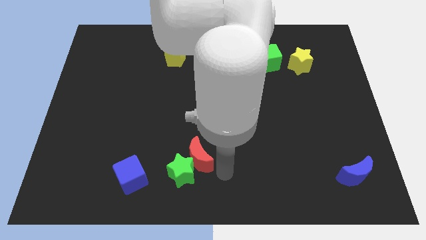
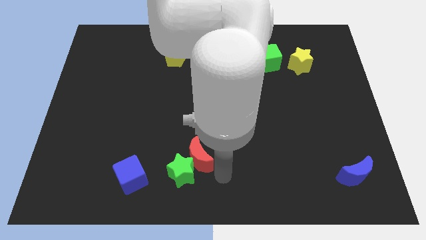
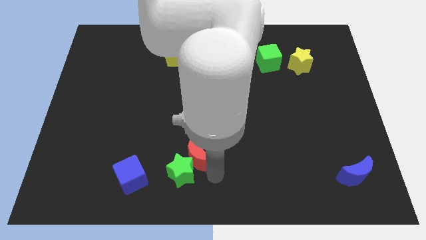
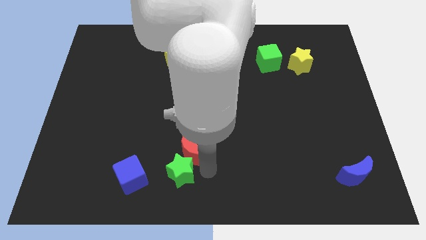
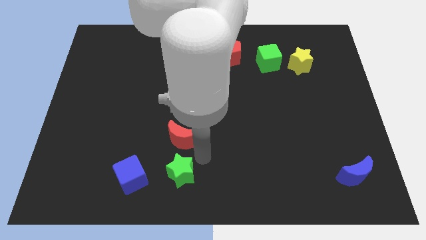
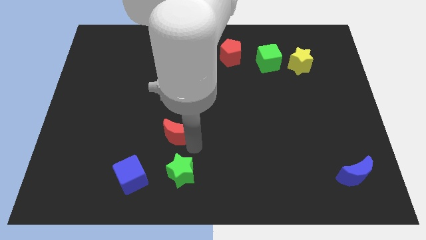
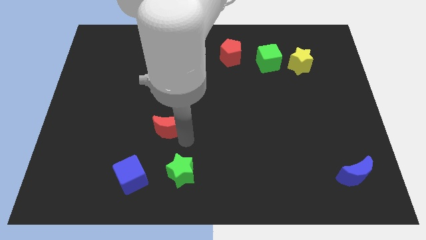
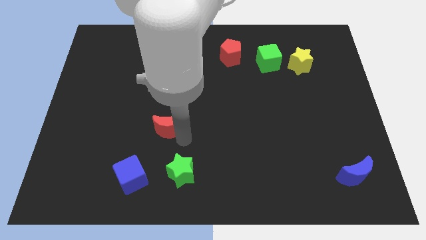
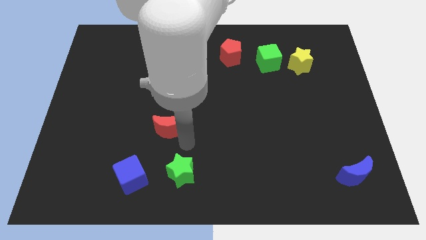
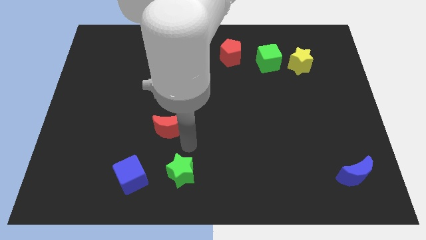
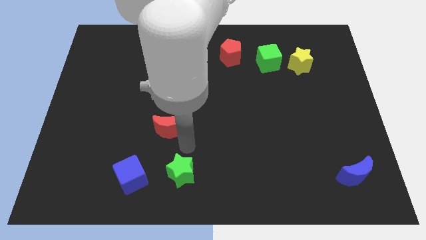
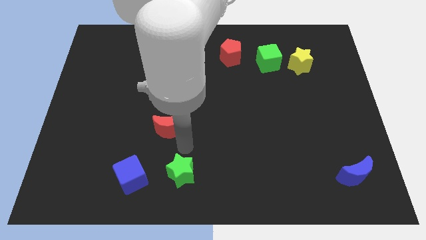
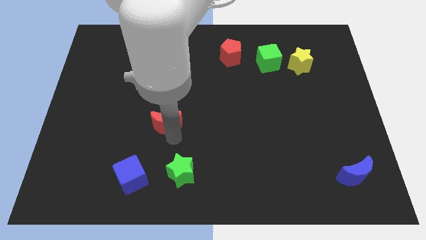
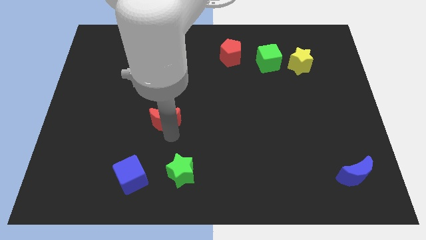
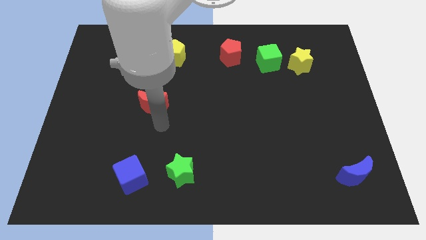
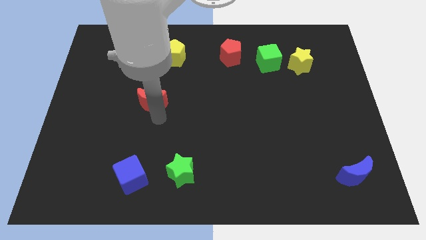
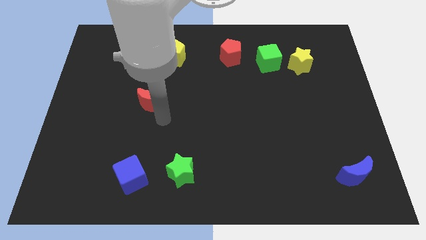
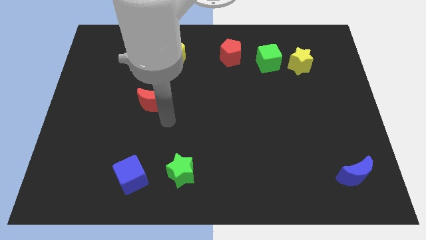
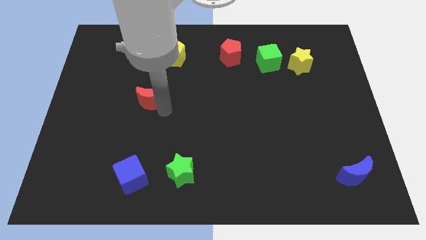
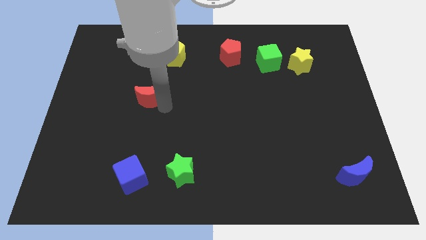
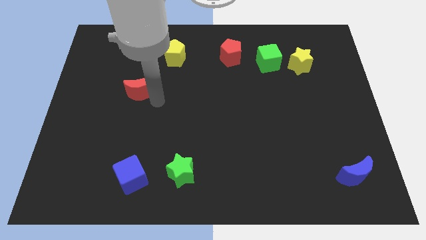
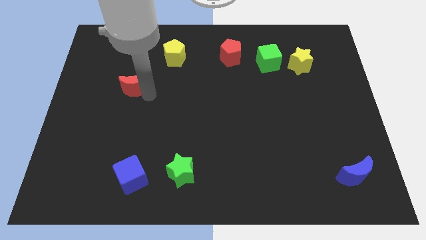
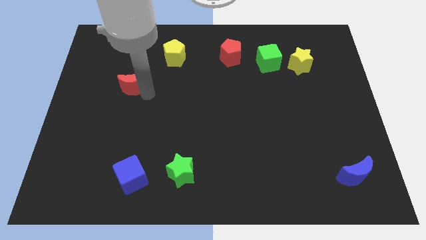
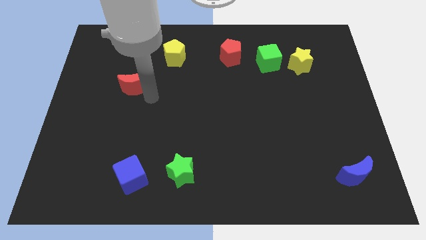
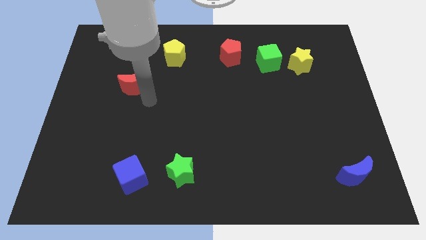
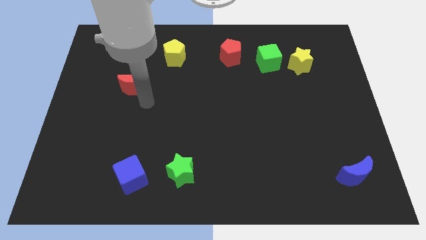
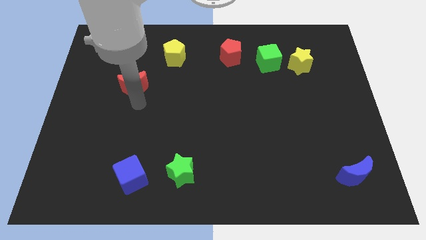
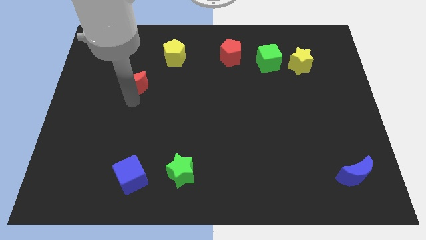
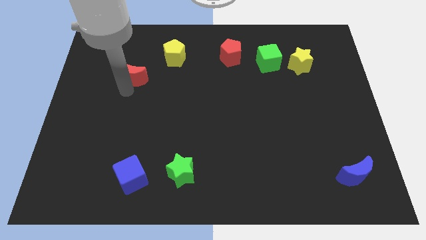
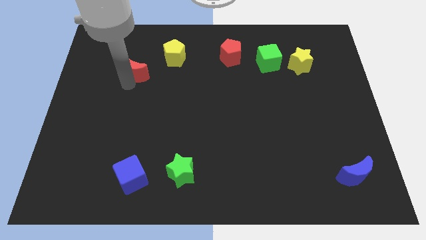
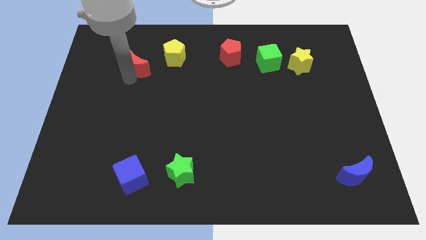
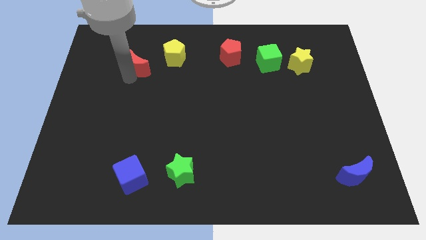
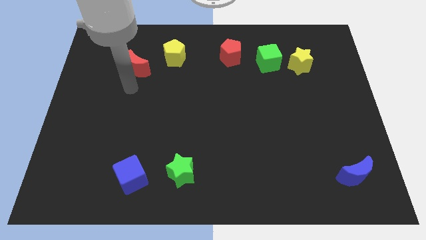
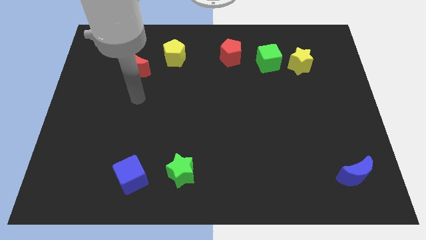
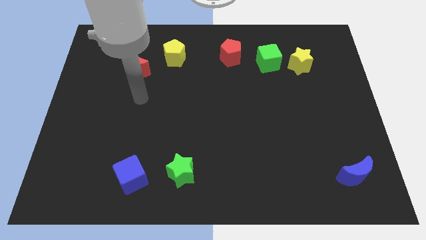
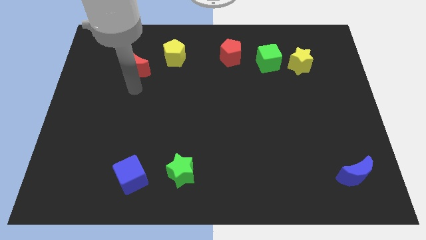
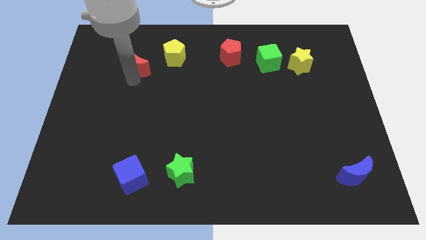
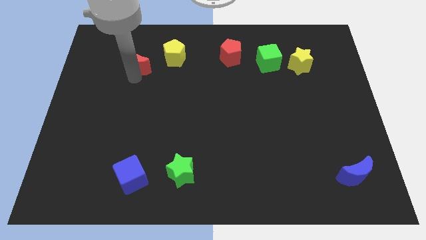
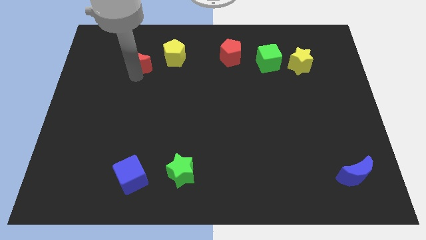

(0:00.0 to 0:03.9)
take the red moon towards the left side of the yellow pentagon

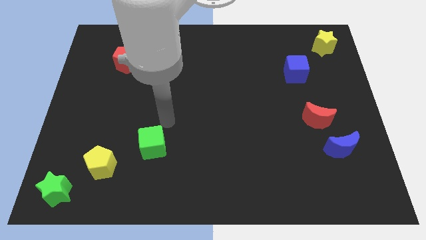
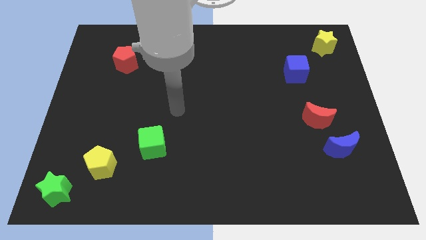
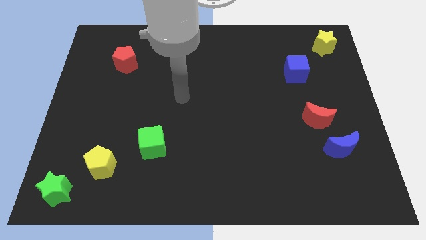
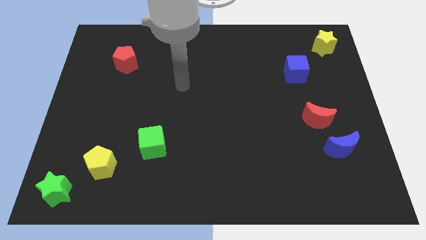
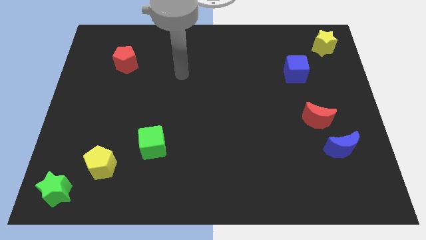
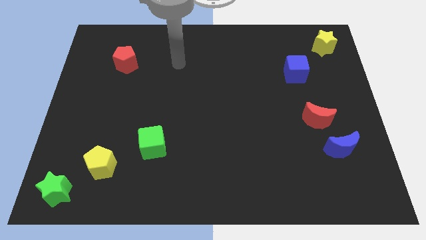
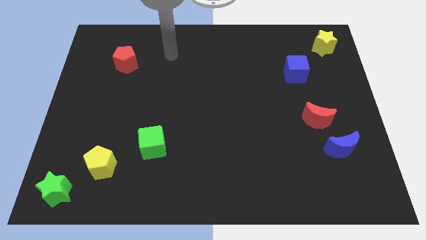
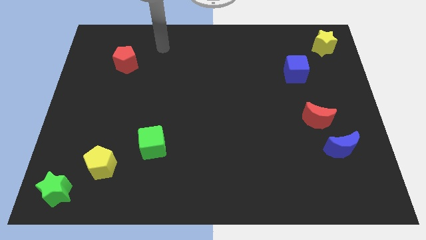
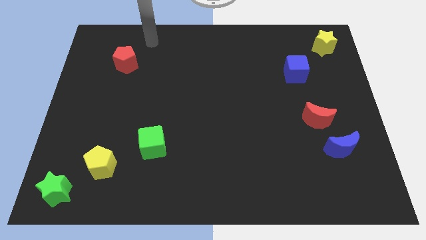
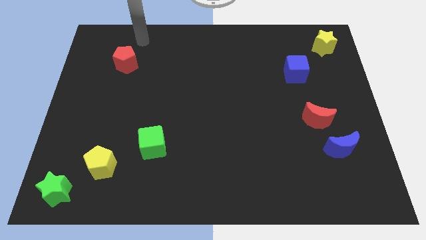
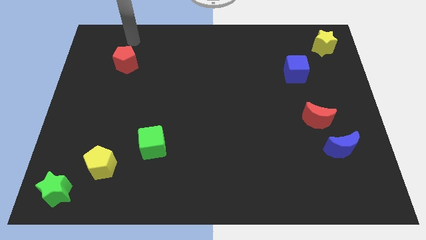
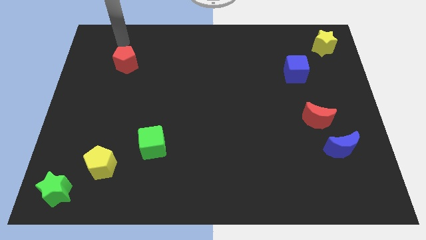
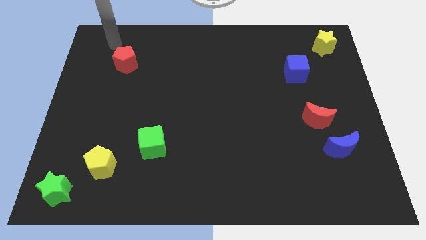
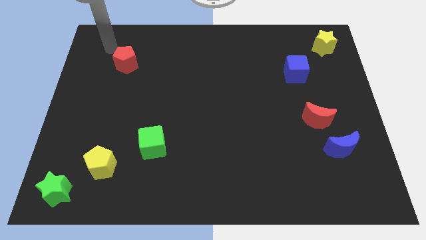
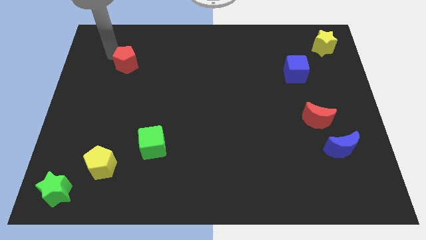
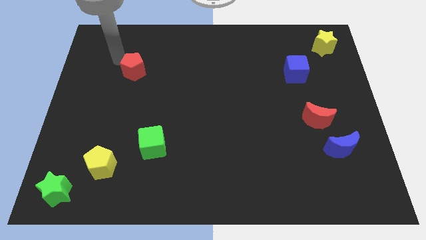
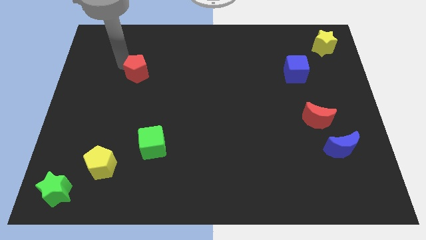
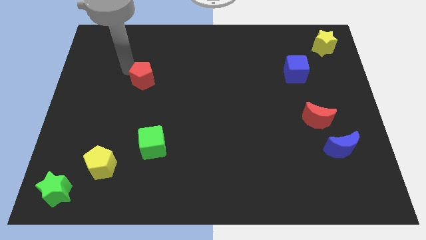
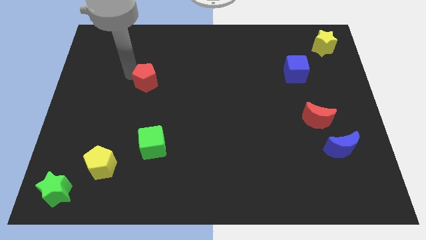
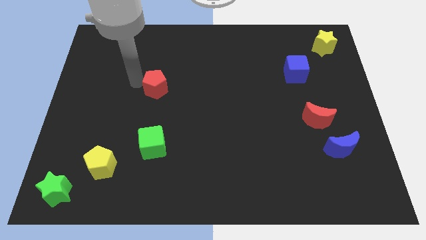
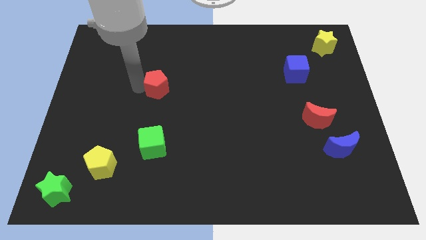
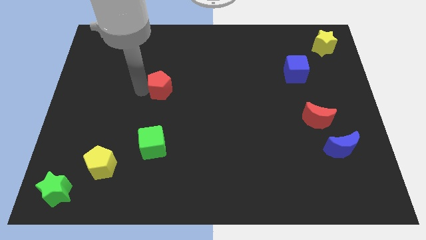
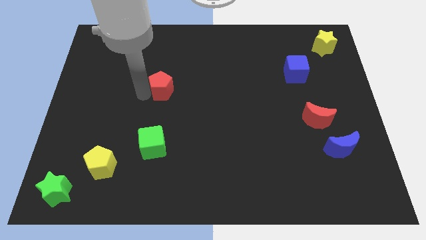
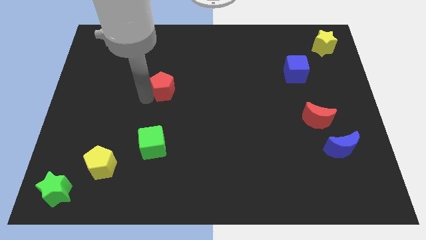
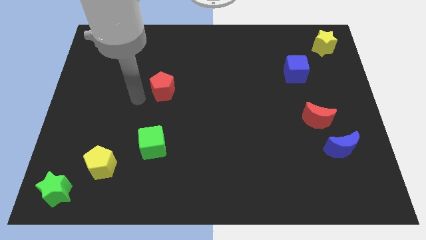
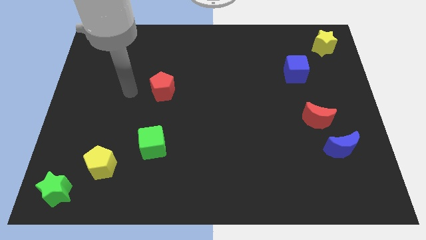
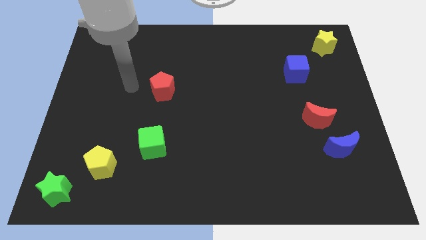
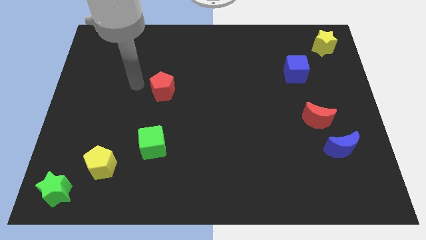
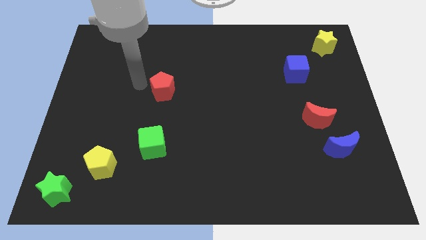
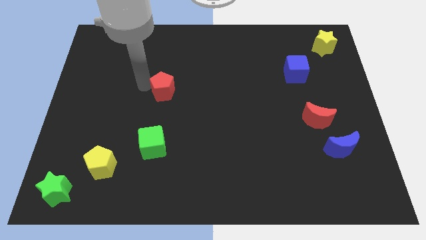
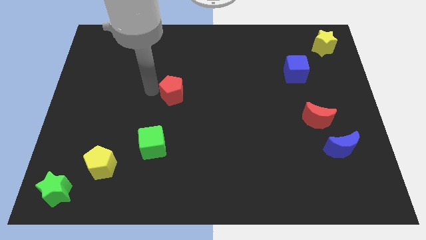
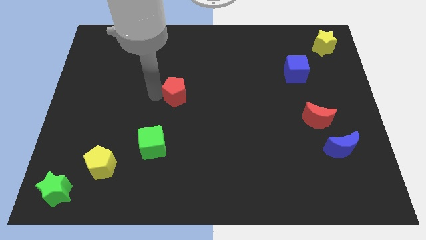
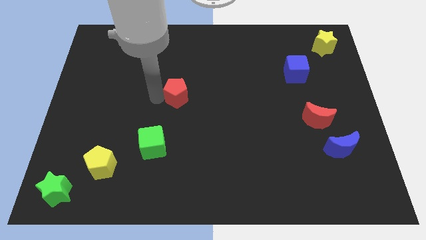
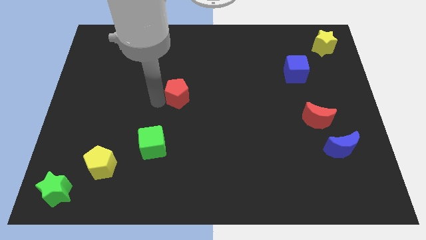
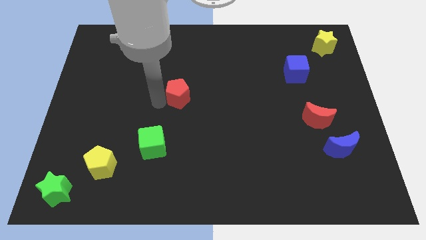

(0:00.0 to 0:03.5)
push the red crescent towards the center of the board

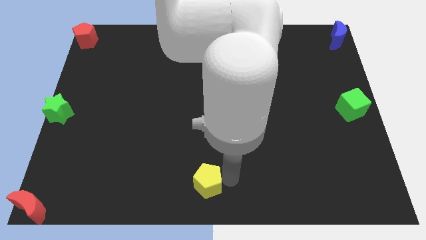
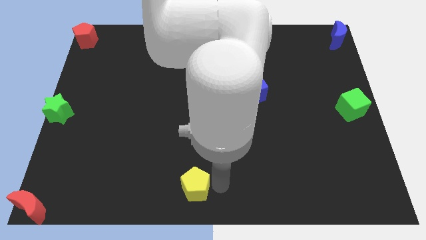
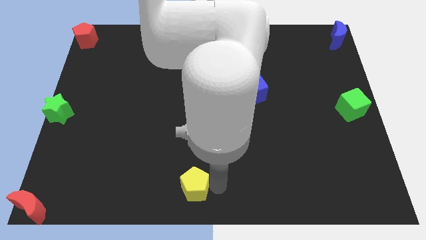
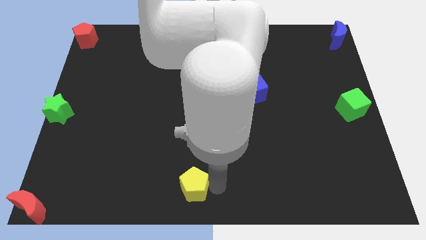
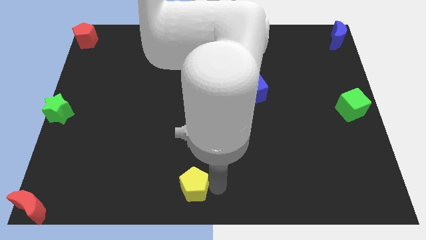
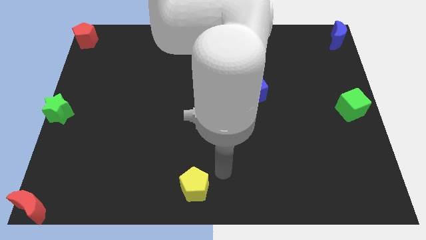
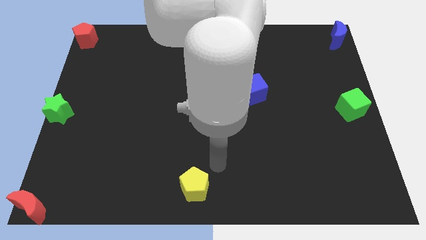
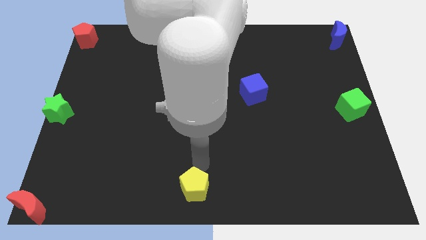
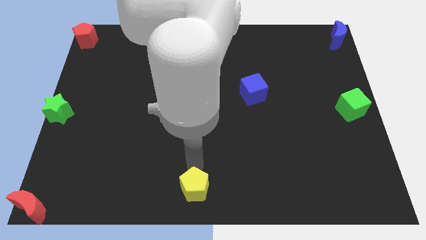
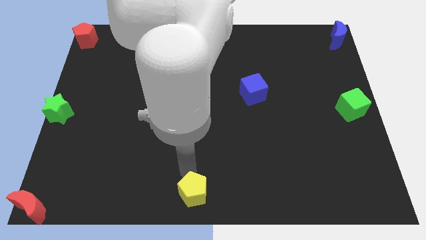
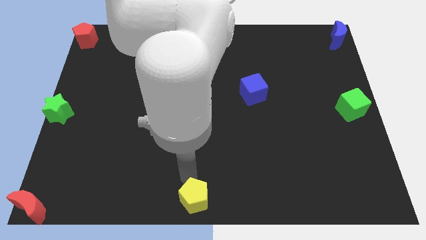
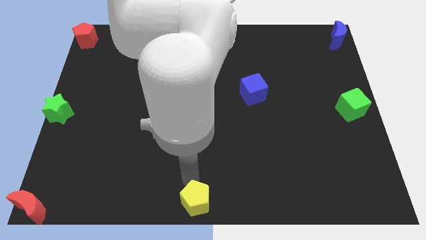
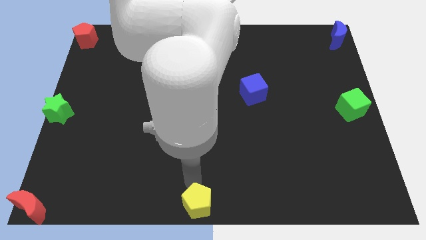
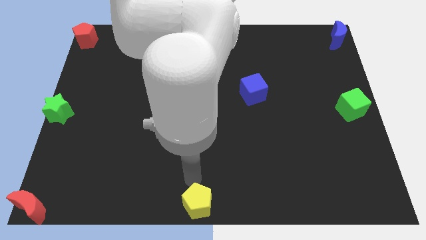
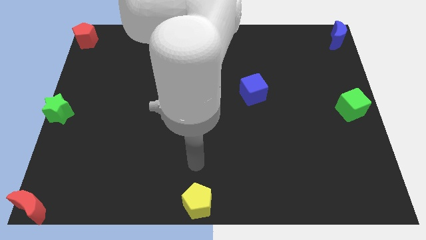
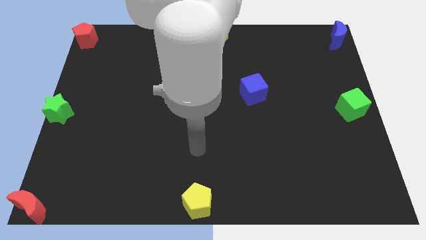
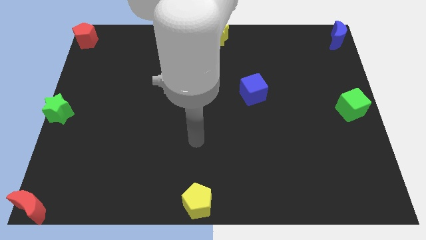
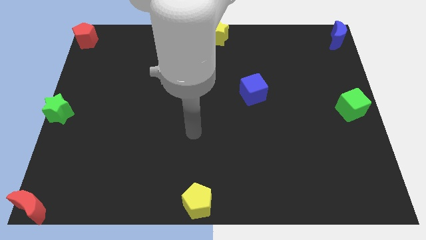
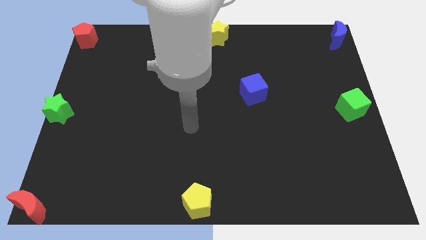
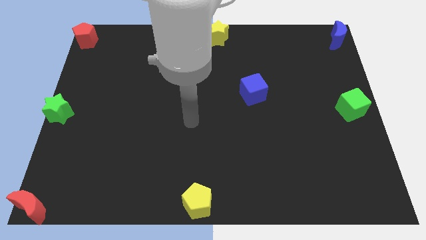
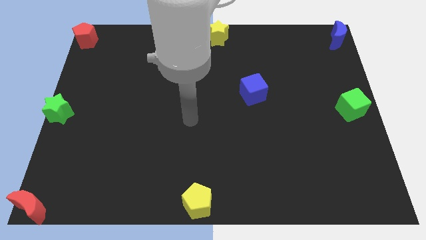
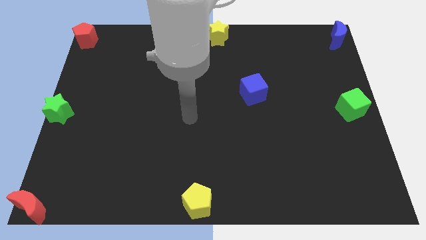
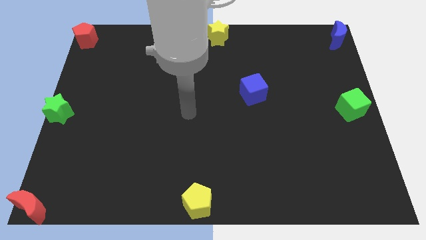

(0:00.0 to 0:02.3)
push the yellow pentagon to the bottom center of the board
